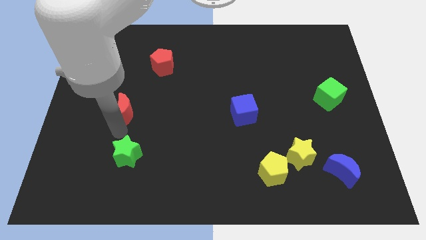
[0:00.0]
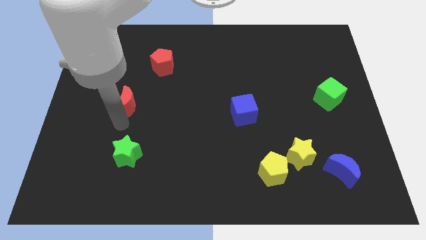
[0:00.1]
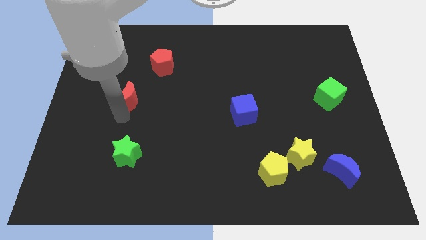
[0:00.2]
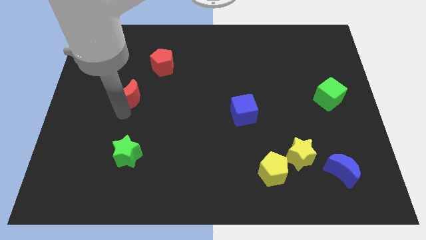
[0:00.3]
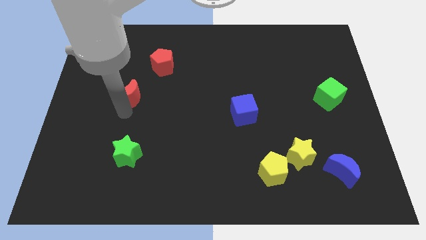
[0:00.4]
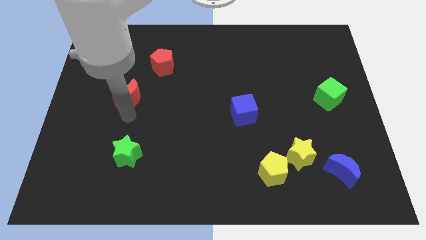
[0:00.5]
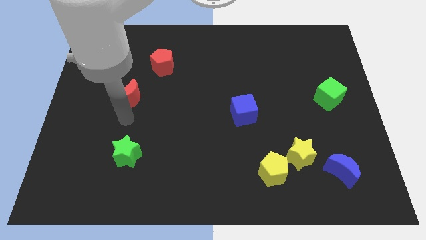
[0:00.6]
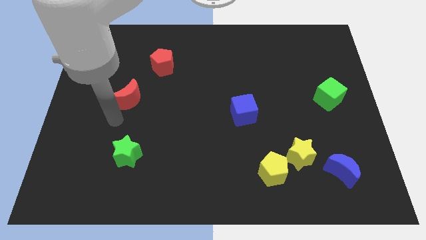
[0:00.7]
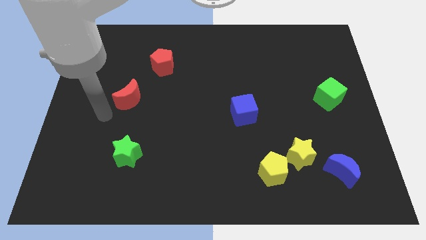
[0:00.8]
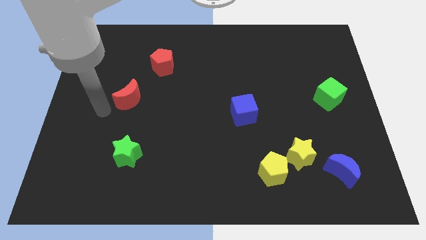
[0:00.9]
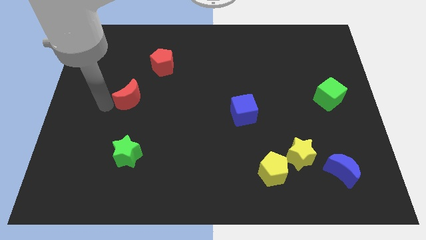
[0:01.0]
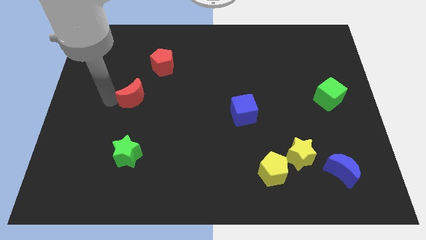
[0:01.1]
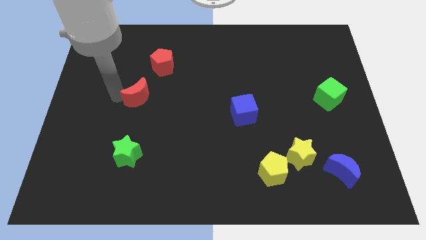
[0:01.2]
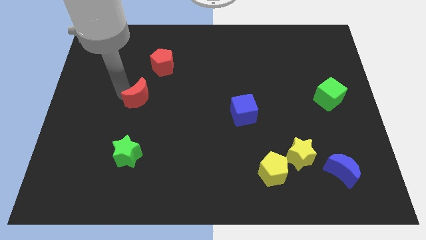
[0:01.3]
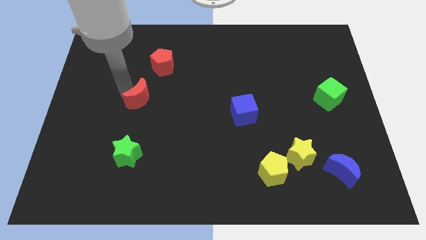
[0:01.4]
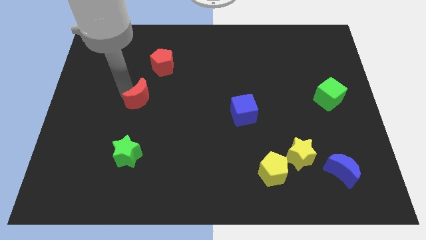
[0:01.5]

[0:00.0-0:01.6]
place the red moon vertically above the green star

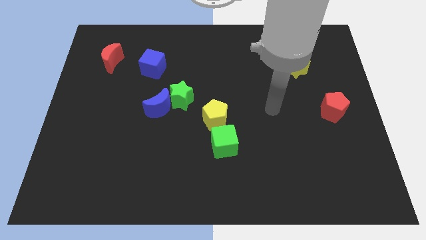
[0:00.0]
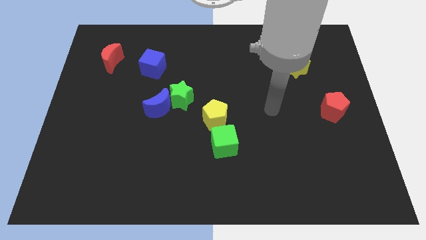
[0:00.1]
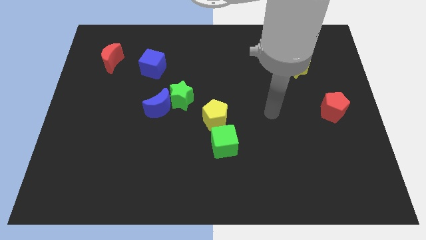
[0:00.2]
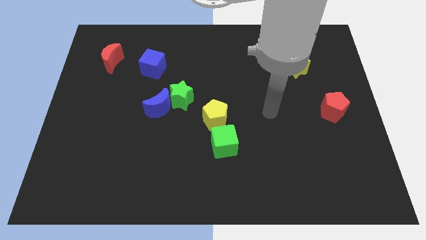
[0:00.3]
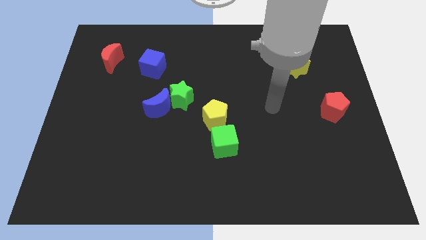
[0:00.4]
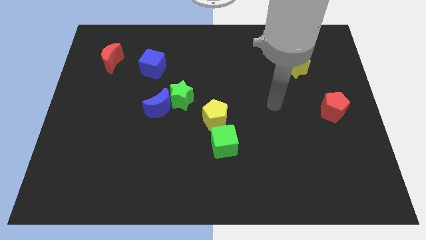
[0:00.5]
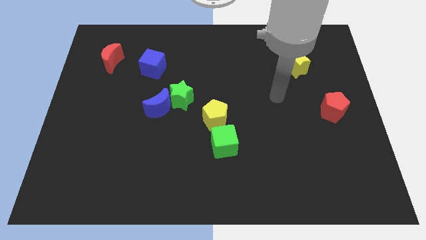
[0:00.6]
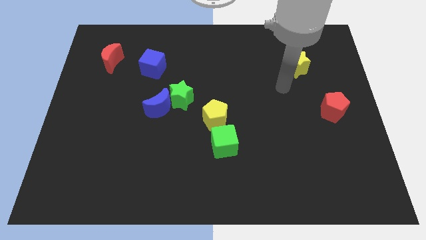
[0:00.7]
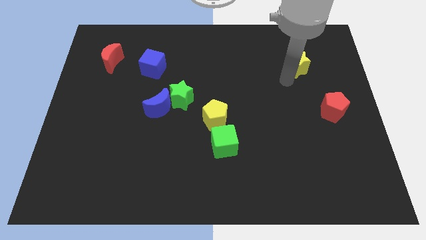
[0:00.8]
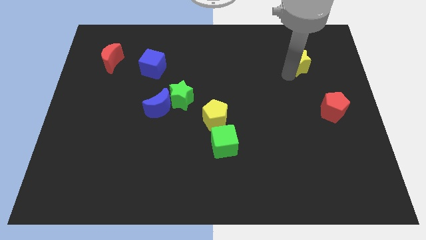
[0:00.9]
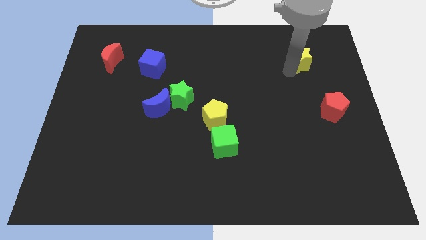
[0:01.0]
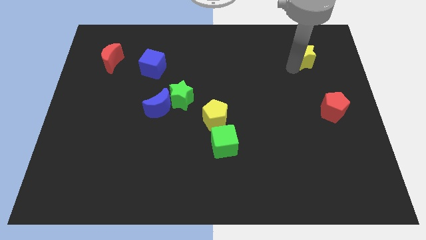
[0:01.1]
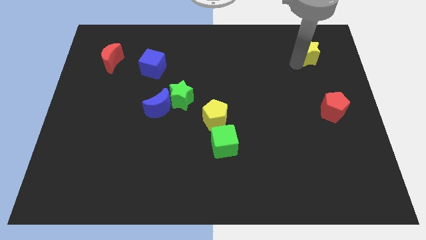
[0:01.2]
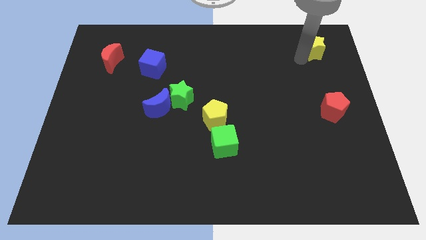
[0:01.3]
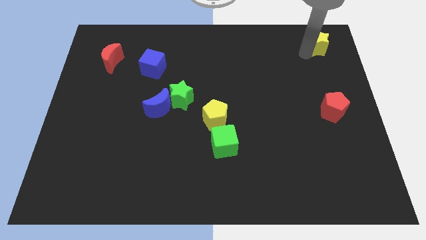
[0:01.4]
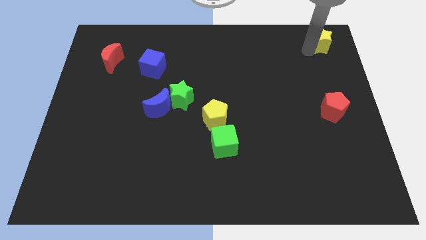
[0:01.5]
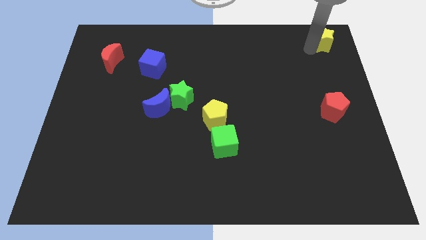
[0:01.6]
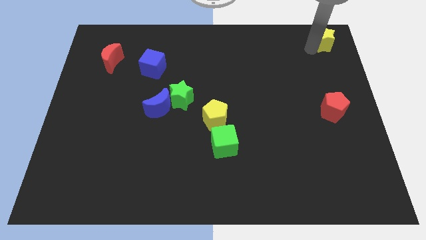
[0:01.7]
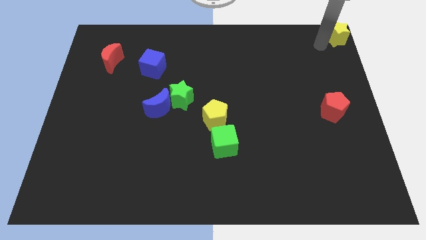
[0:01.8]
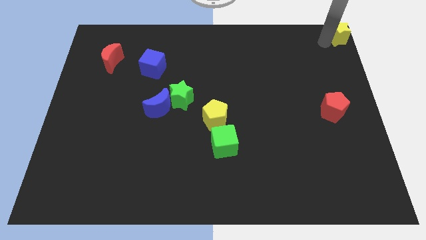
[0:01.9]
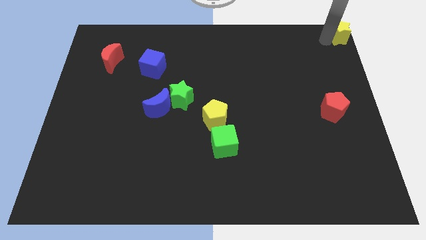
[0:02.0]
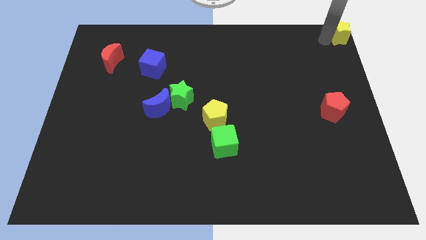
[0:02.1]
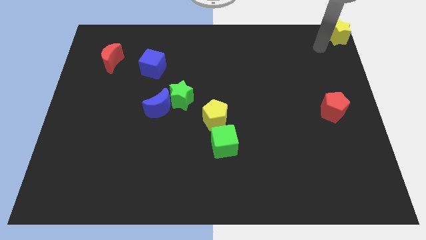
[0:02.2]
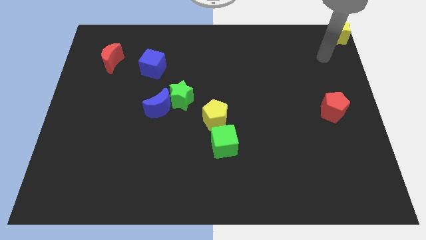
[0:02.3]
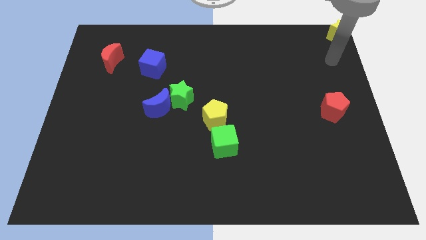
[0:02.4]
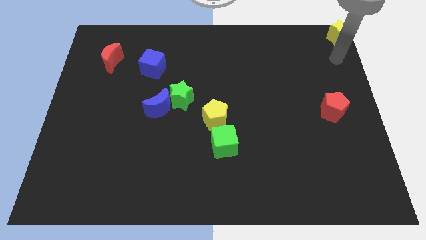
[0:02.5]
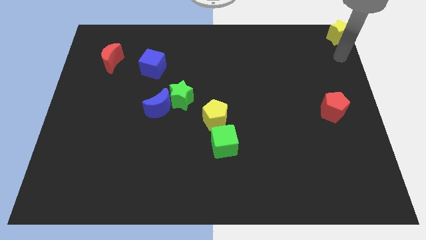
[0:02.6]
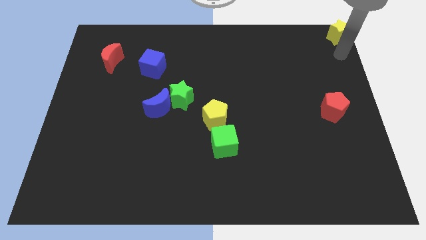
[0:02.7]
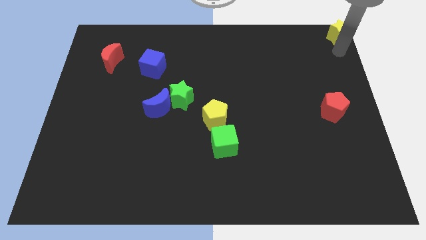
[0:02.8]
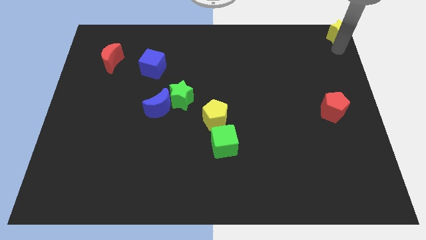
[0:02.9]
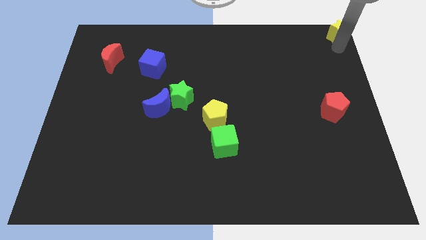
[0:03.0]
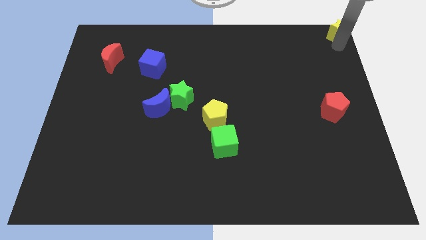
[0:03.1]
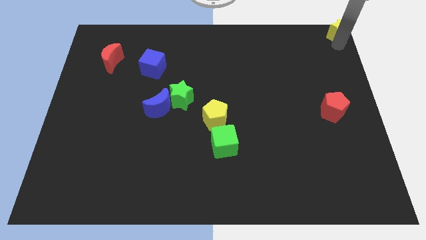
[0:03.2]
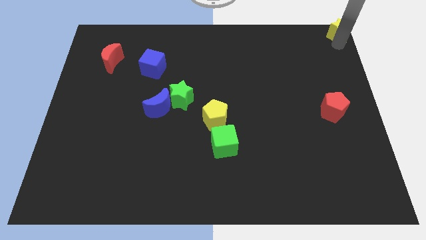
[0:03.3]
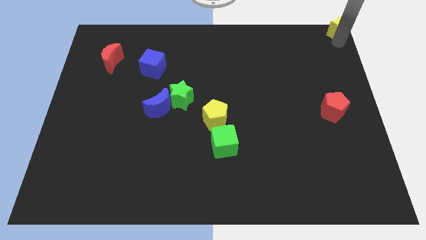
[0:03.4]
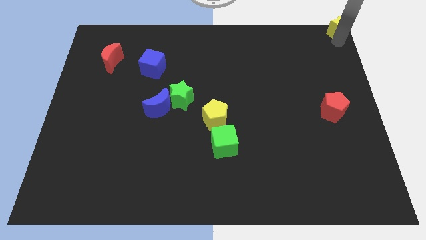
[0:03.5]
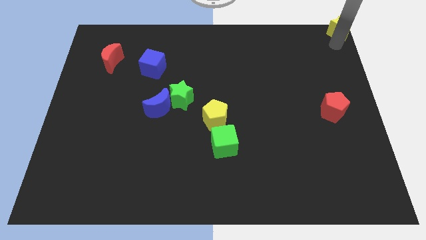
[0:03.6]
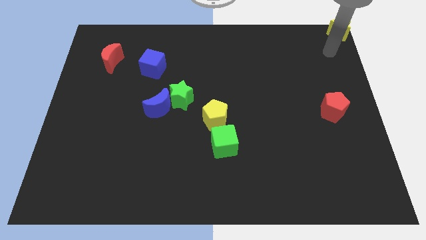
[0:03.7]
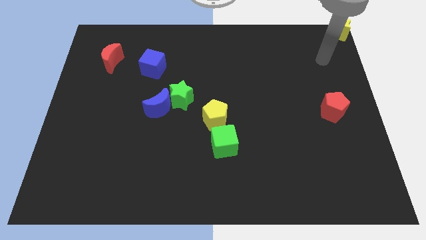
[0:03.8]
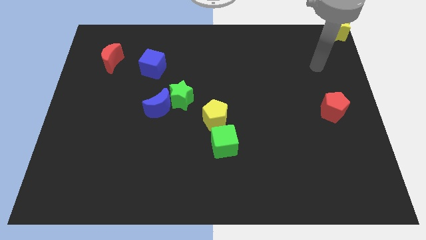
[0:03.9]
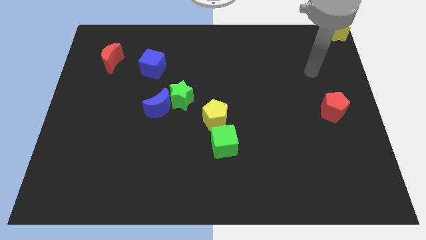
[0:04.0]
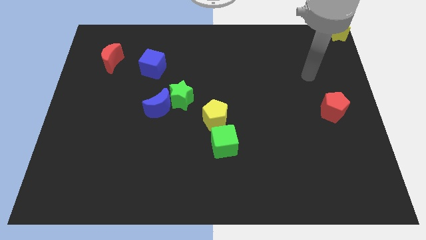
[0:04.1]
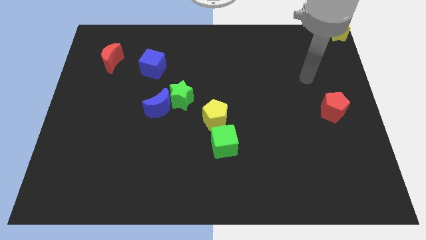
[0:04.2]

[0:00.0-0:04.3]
push yellow star to the right top corner

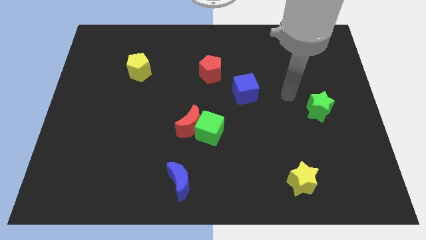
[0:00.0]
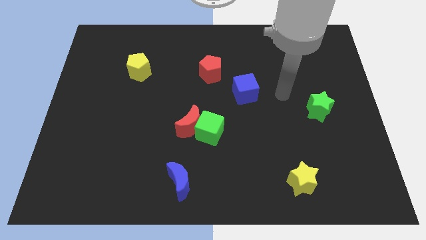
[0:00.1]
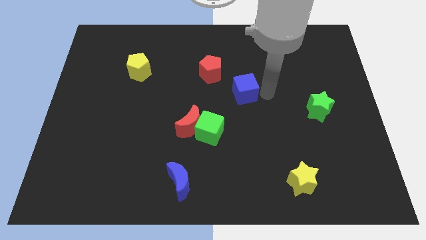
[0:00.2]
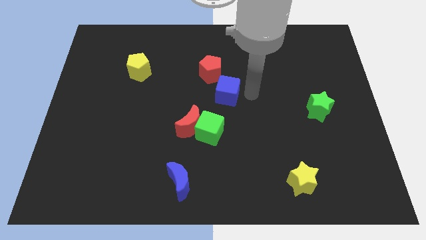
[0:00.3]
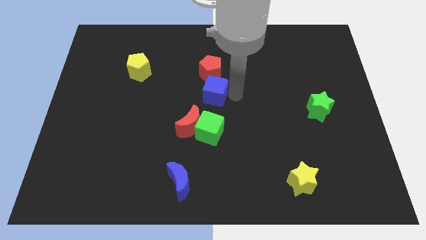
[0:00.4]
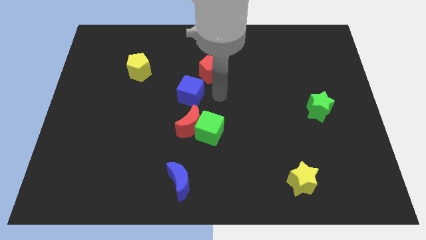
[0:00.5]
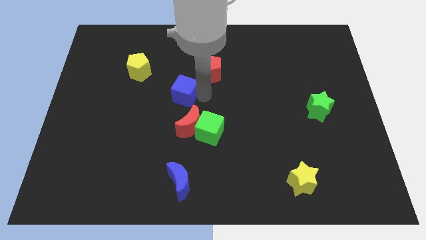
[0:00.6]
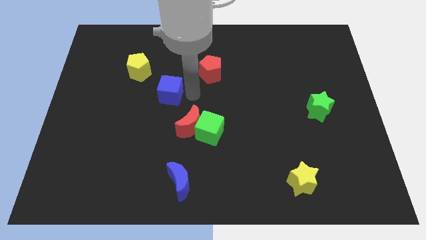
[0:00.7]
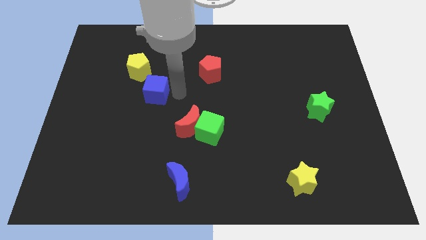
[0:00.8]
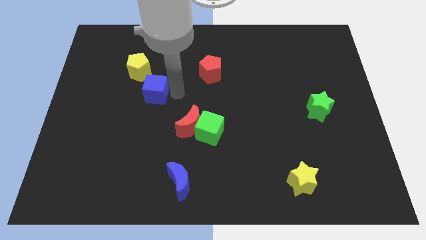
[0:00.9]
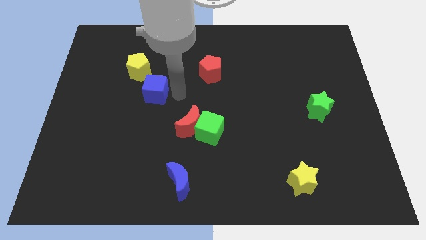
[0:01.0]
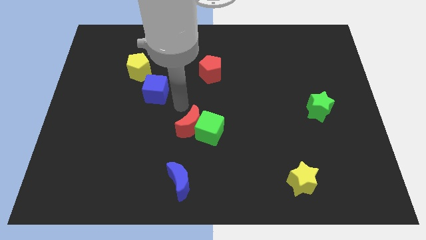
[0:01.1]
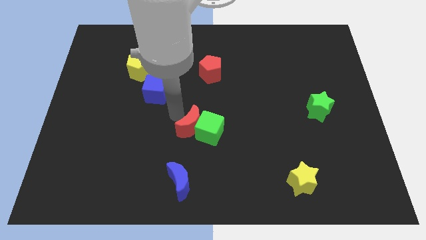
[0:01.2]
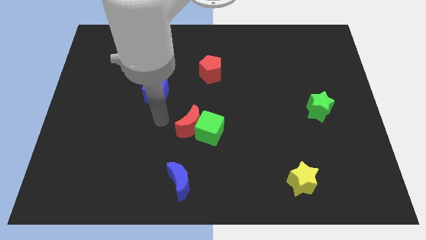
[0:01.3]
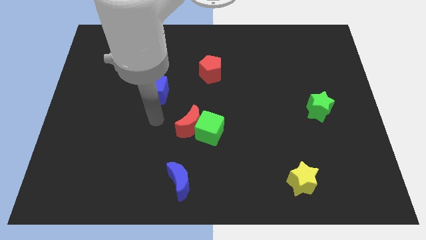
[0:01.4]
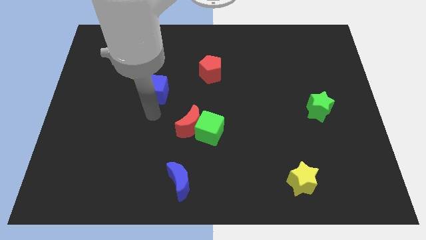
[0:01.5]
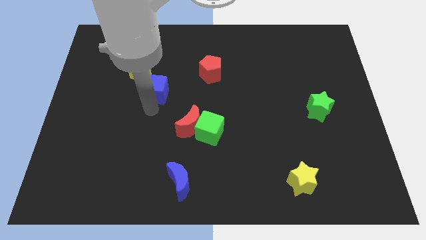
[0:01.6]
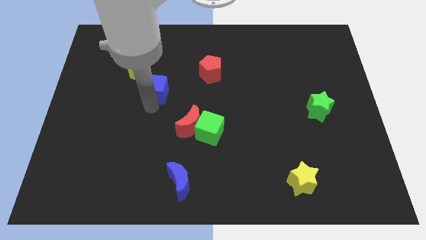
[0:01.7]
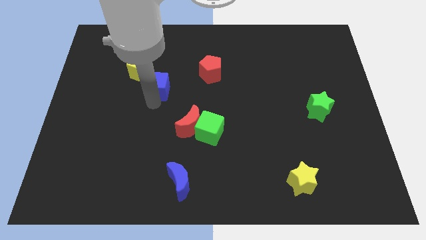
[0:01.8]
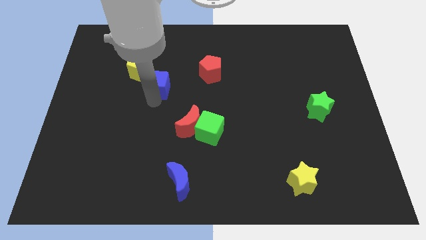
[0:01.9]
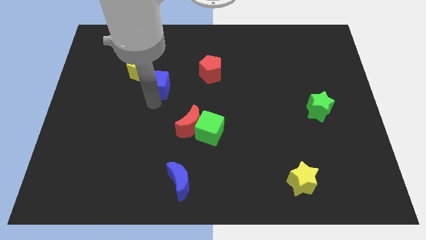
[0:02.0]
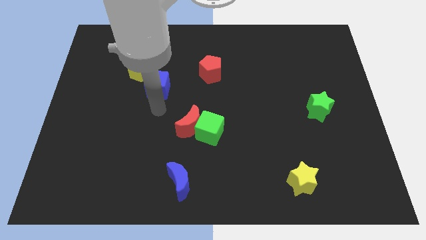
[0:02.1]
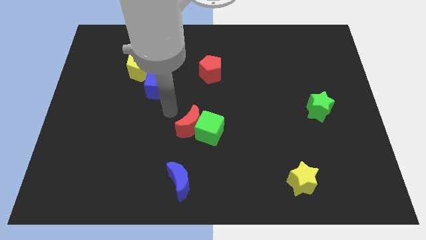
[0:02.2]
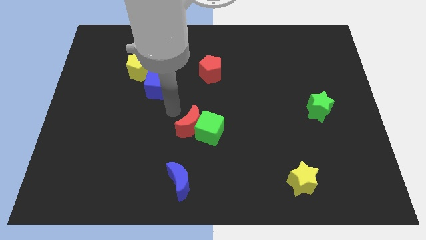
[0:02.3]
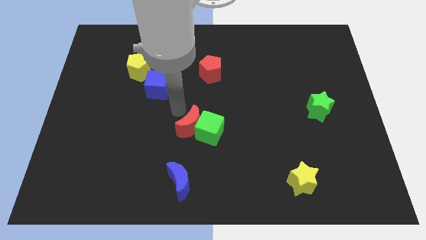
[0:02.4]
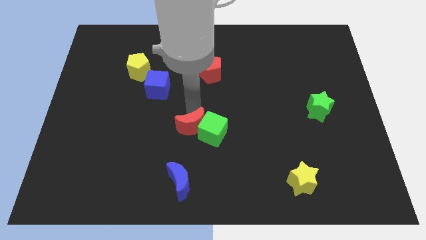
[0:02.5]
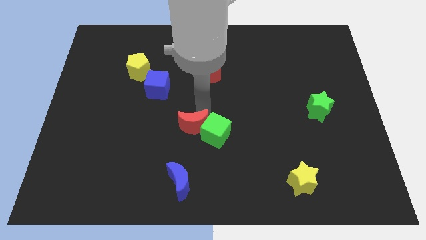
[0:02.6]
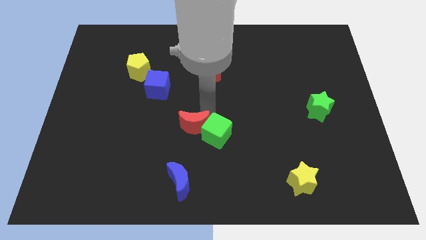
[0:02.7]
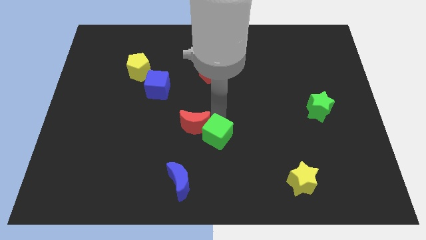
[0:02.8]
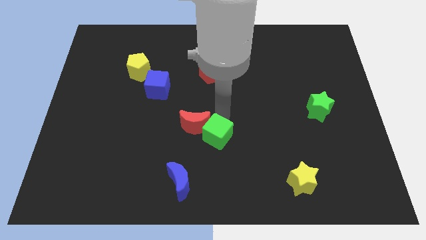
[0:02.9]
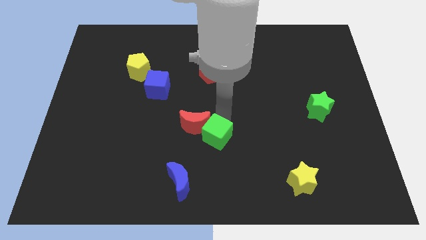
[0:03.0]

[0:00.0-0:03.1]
slide the blue cube to the bottom right of the yellow pentagon
